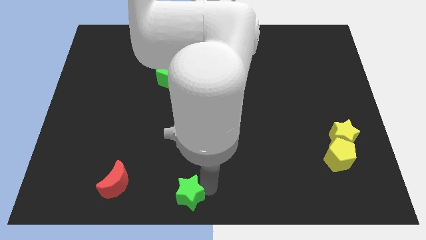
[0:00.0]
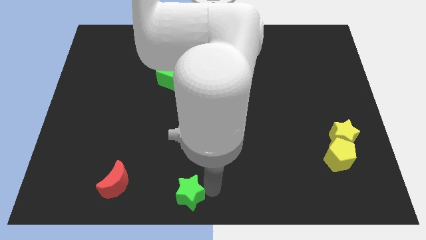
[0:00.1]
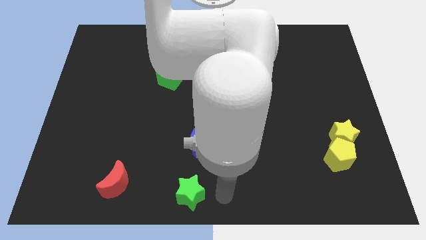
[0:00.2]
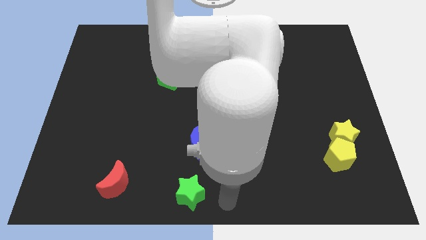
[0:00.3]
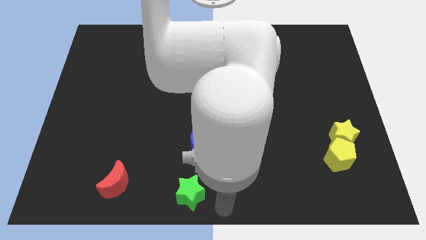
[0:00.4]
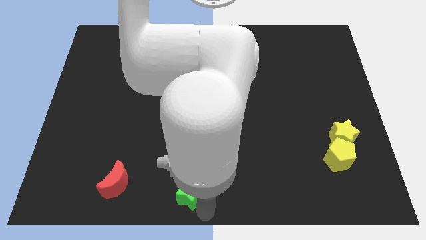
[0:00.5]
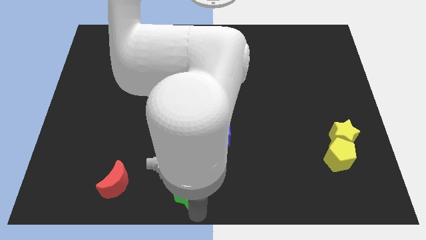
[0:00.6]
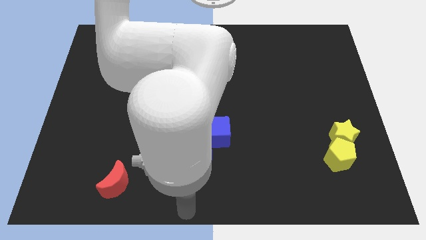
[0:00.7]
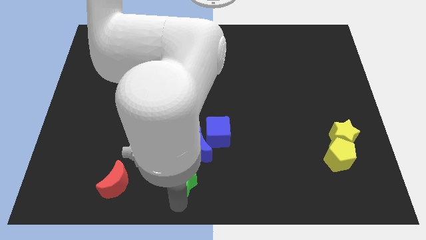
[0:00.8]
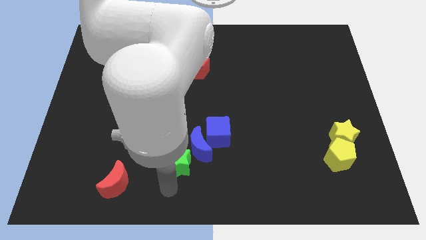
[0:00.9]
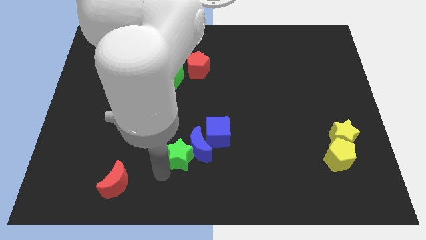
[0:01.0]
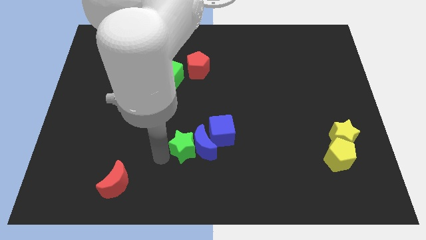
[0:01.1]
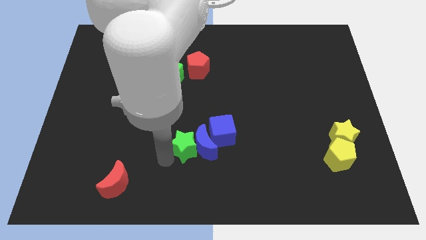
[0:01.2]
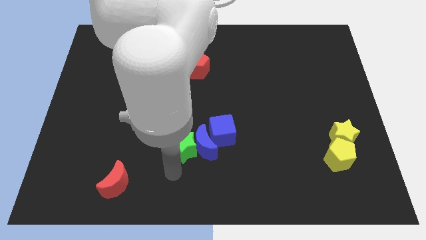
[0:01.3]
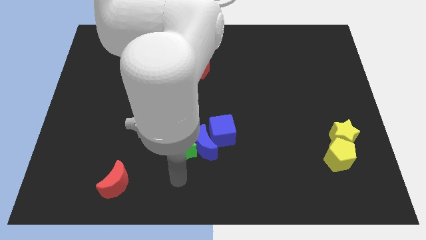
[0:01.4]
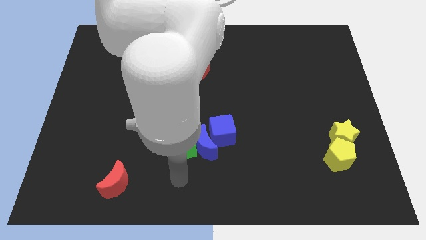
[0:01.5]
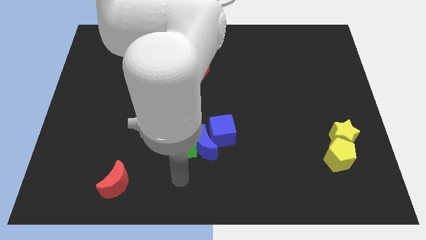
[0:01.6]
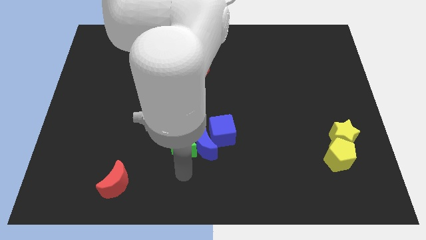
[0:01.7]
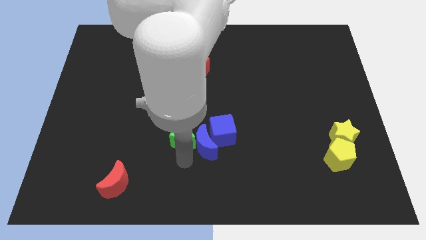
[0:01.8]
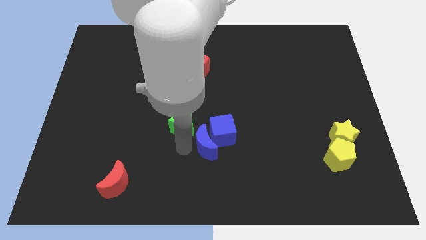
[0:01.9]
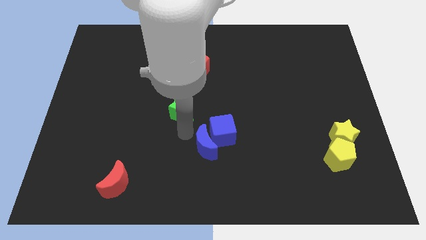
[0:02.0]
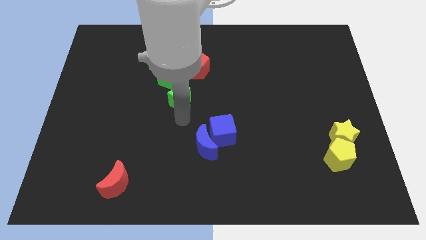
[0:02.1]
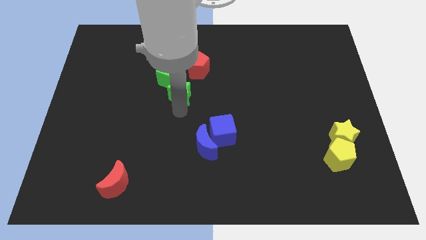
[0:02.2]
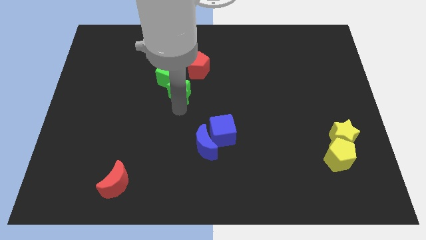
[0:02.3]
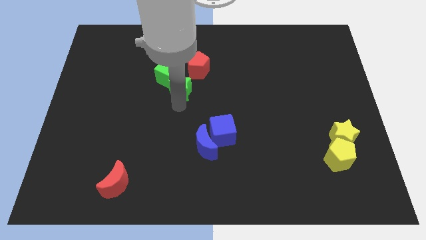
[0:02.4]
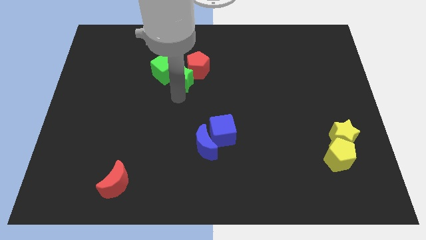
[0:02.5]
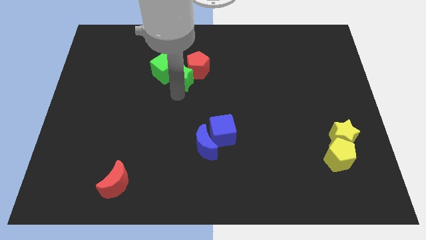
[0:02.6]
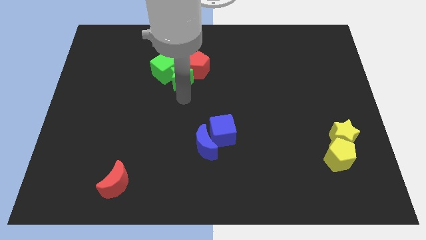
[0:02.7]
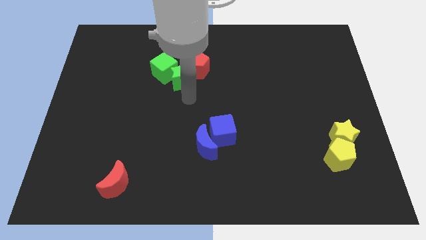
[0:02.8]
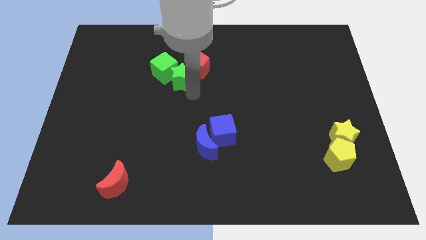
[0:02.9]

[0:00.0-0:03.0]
move the green star into the green cube

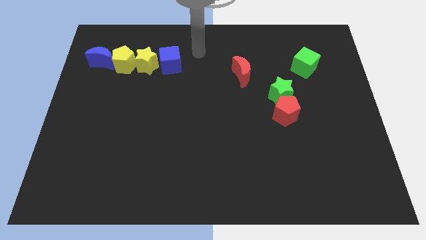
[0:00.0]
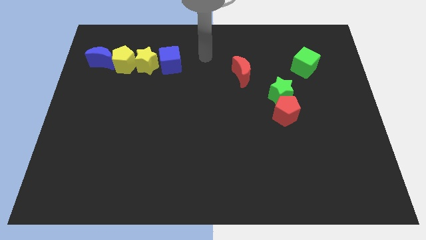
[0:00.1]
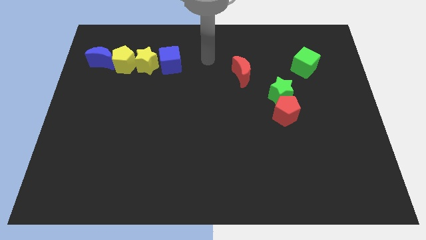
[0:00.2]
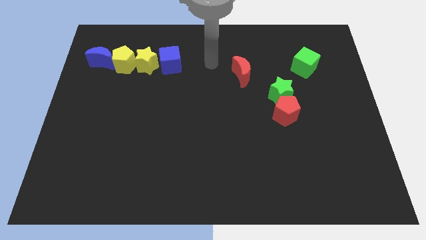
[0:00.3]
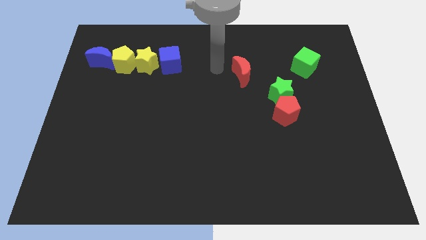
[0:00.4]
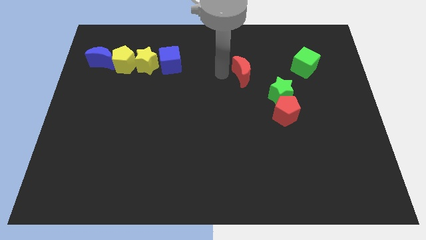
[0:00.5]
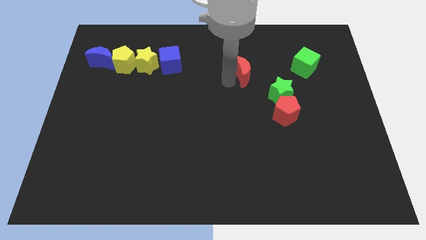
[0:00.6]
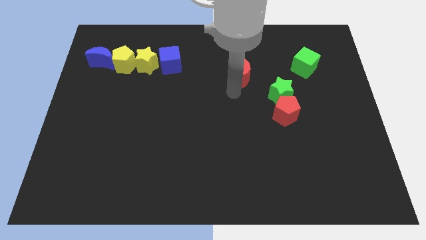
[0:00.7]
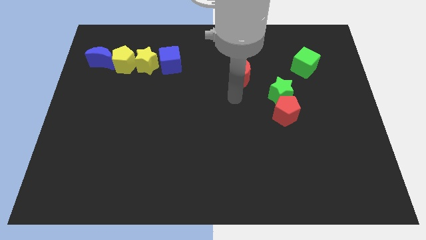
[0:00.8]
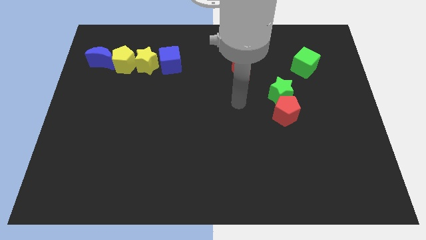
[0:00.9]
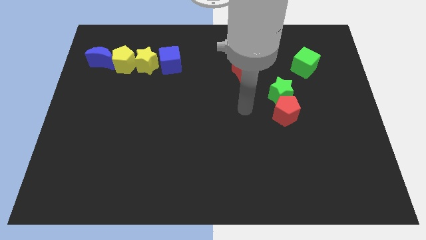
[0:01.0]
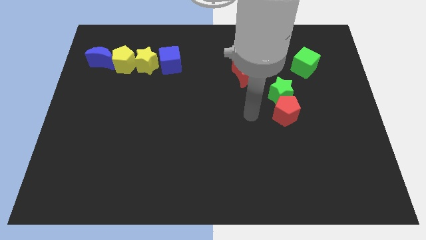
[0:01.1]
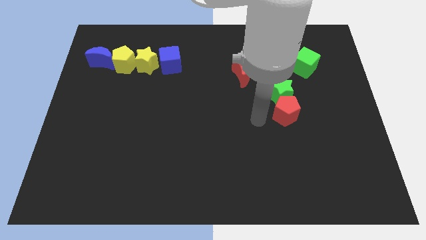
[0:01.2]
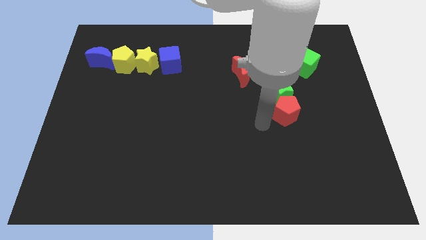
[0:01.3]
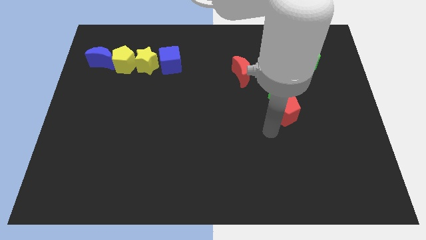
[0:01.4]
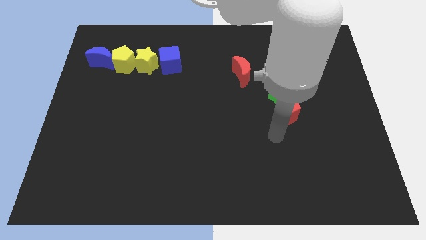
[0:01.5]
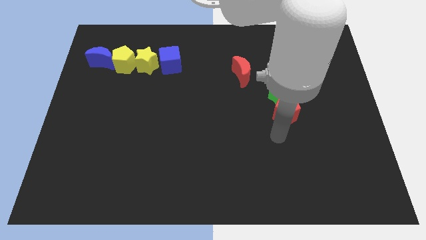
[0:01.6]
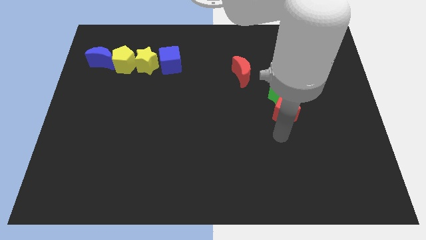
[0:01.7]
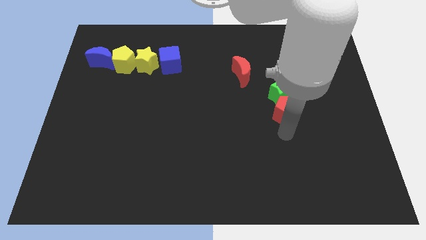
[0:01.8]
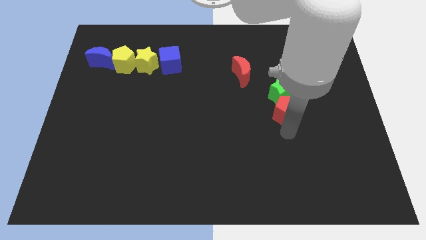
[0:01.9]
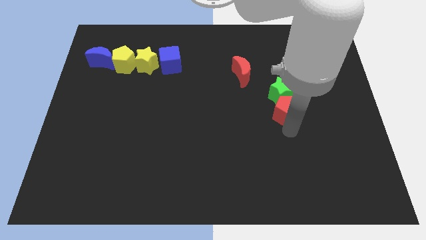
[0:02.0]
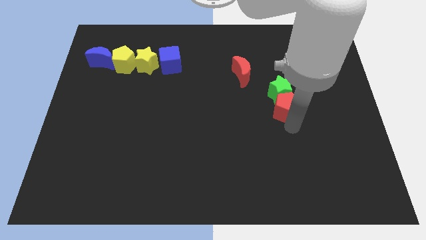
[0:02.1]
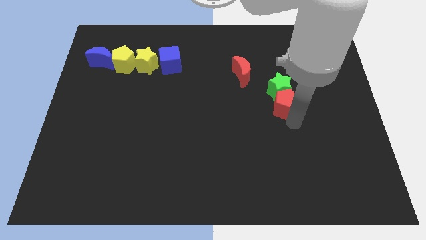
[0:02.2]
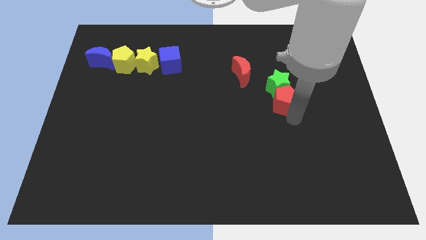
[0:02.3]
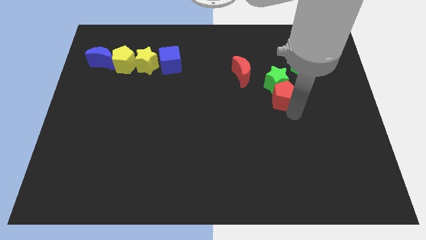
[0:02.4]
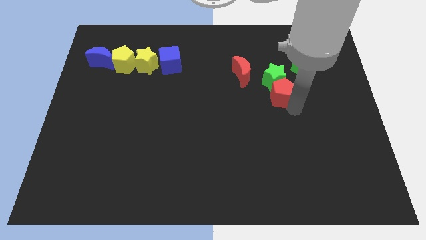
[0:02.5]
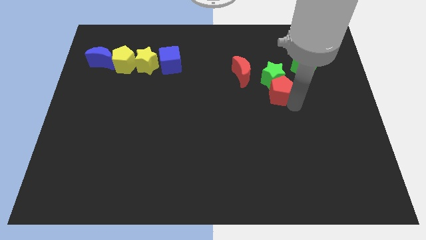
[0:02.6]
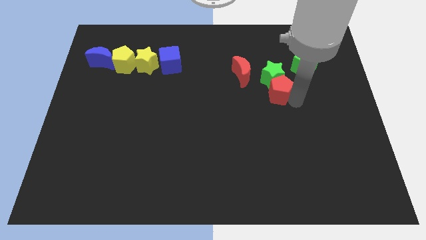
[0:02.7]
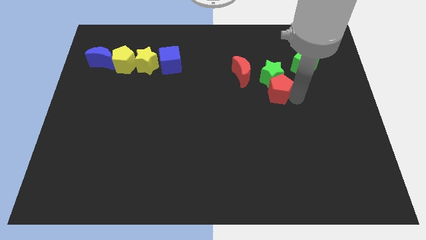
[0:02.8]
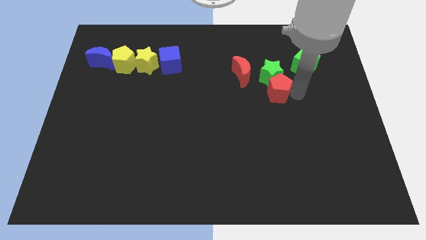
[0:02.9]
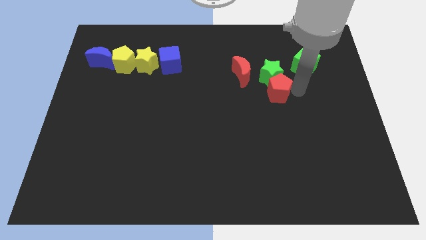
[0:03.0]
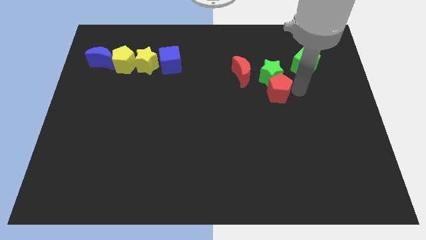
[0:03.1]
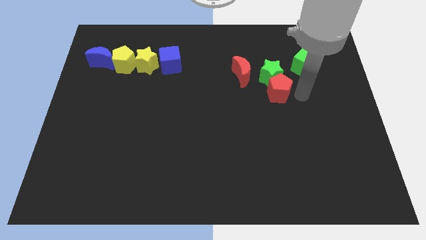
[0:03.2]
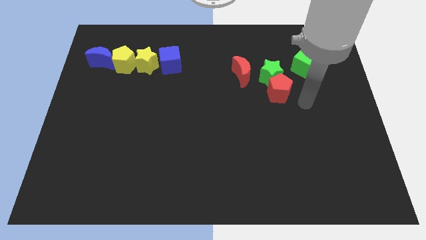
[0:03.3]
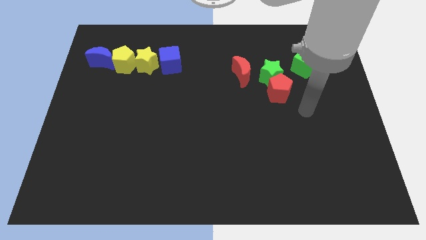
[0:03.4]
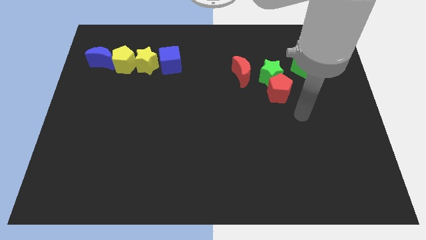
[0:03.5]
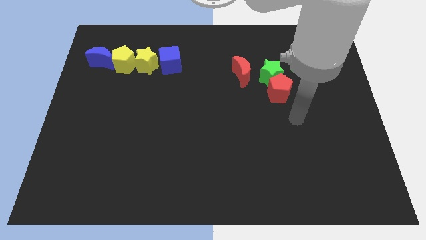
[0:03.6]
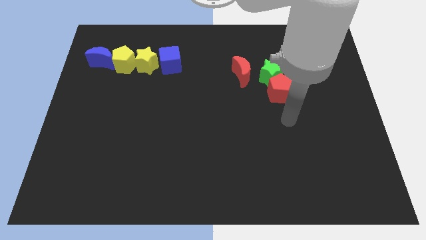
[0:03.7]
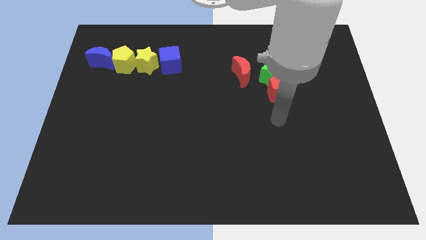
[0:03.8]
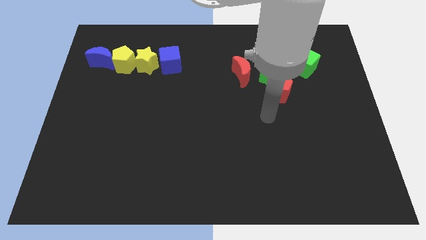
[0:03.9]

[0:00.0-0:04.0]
push the red pentagon and green star upwards

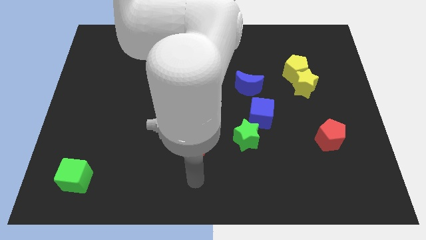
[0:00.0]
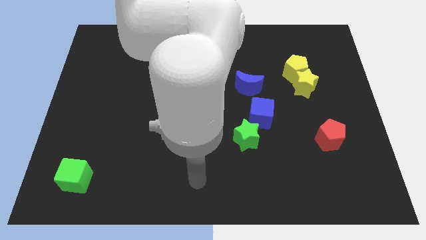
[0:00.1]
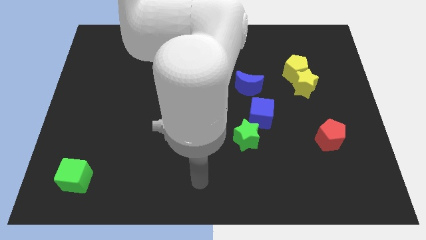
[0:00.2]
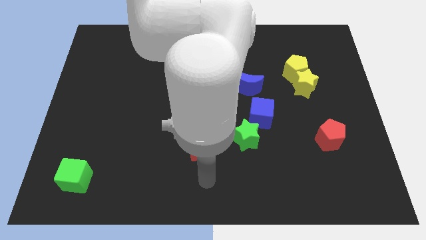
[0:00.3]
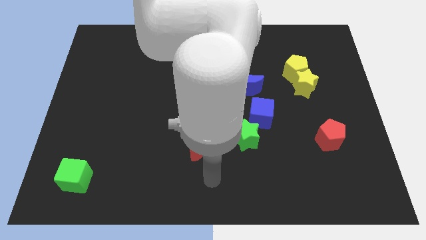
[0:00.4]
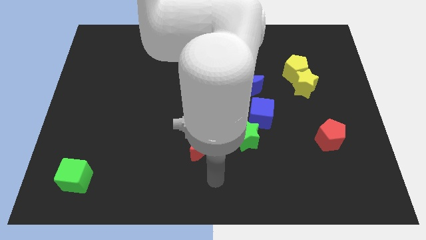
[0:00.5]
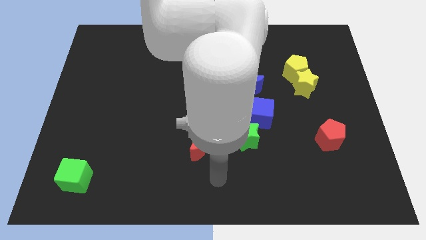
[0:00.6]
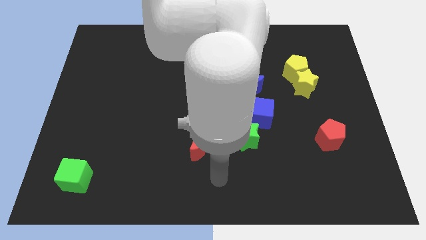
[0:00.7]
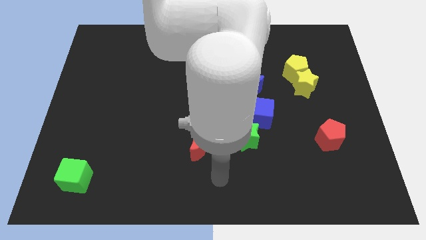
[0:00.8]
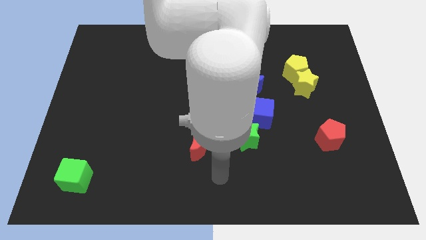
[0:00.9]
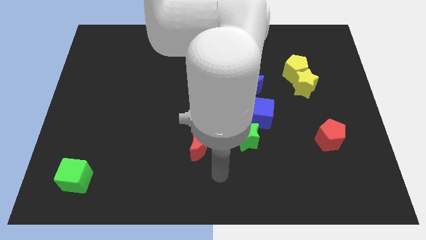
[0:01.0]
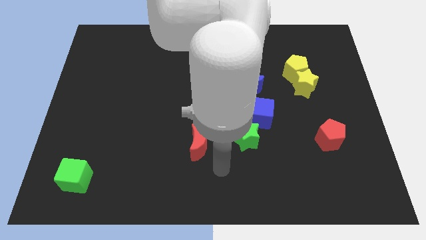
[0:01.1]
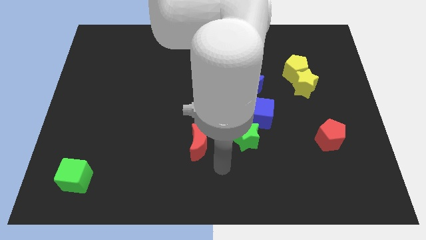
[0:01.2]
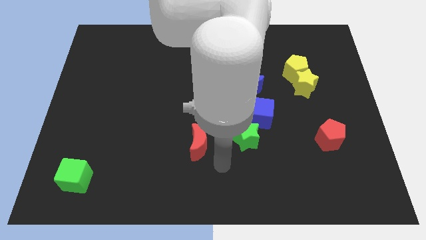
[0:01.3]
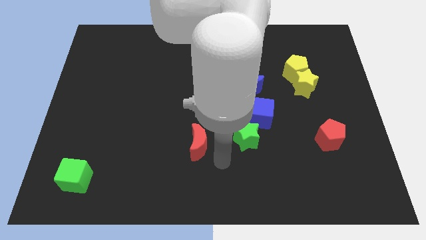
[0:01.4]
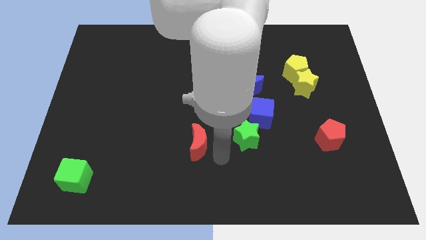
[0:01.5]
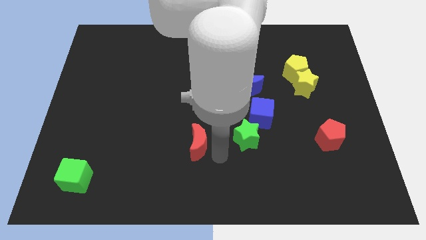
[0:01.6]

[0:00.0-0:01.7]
move your arm to the bottom right of the red crescent

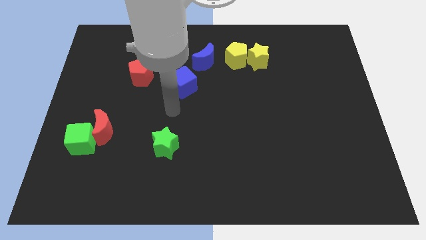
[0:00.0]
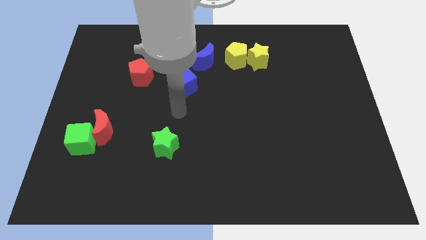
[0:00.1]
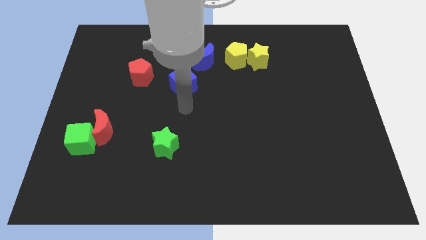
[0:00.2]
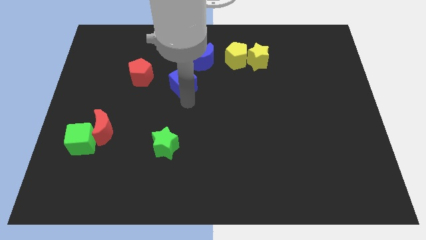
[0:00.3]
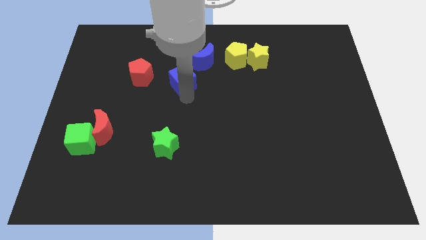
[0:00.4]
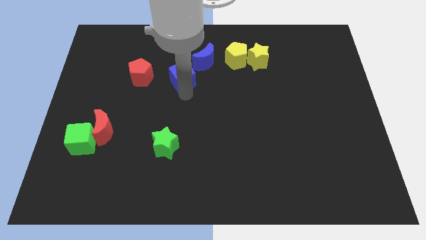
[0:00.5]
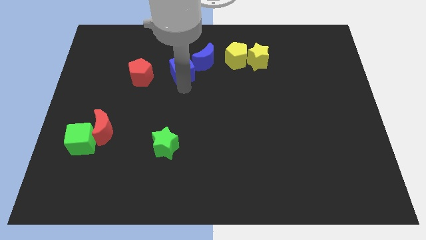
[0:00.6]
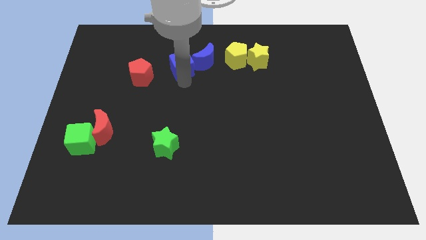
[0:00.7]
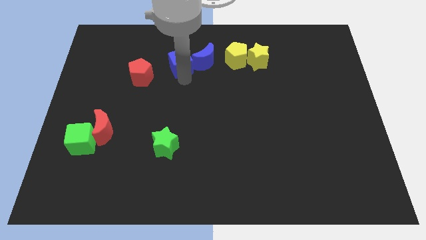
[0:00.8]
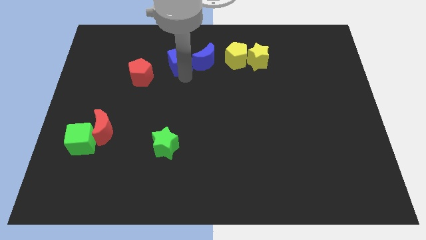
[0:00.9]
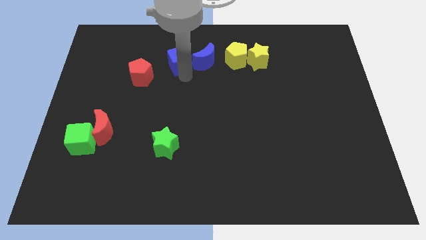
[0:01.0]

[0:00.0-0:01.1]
push the blue cube into the blue crescent
